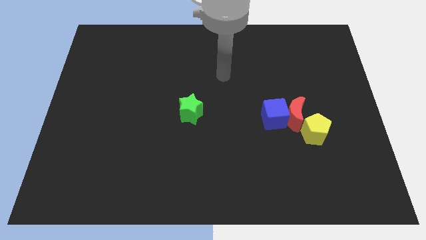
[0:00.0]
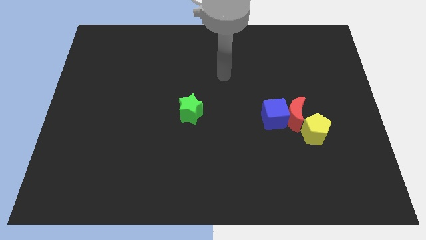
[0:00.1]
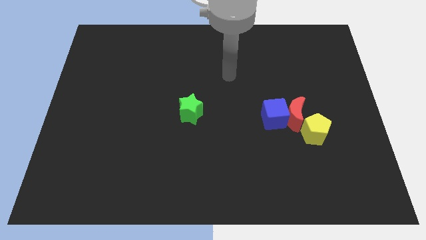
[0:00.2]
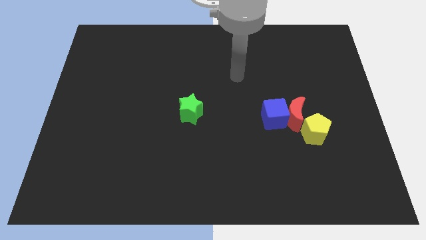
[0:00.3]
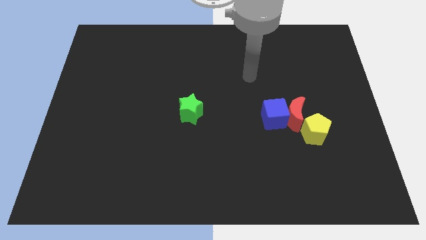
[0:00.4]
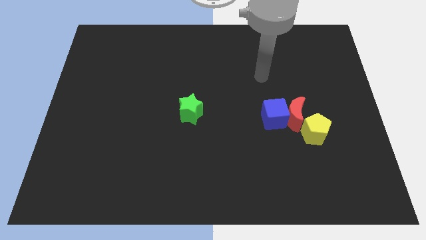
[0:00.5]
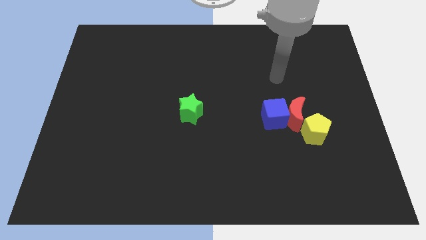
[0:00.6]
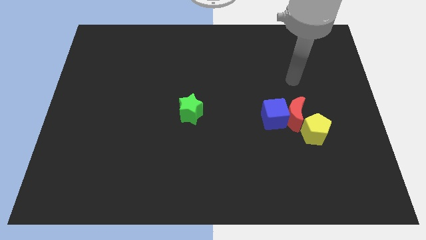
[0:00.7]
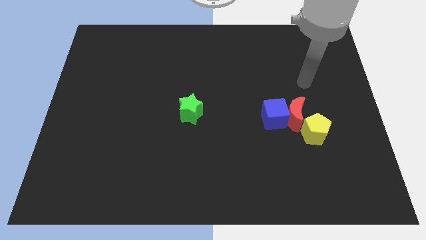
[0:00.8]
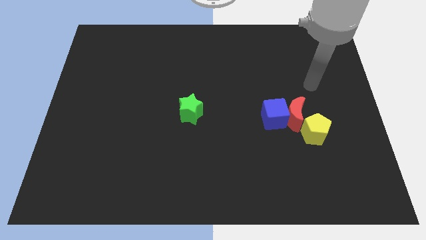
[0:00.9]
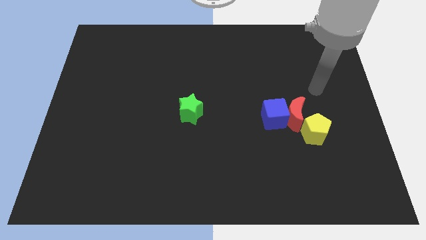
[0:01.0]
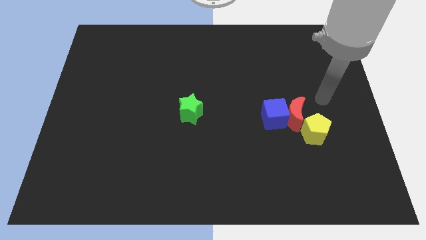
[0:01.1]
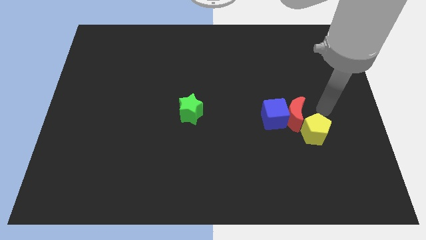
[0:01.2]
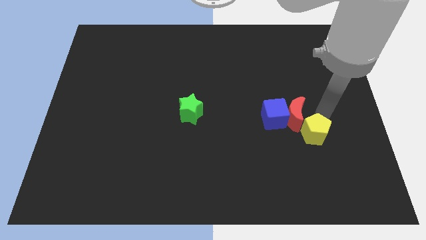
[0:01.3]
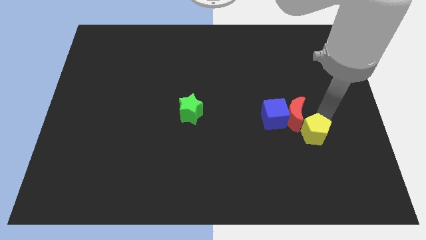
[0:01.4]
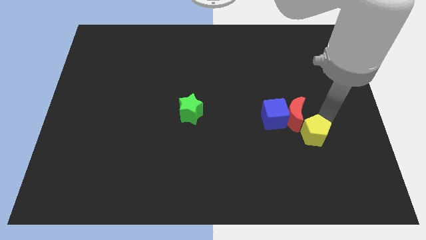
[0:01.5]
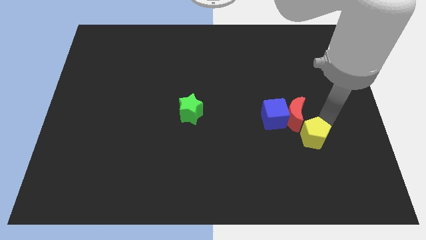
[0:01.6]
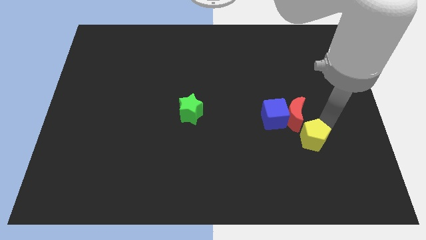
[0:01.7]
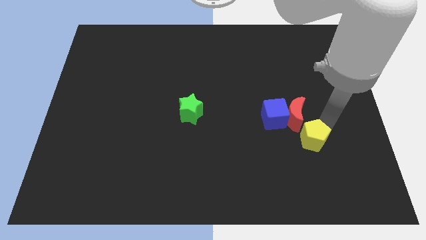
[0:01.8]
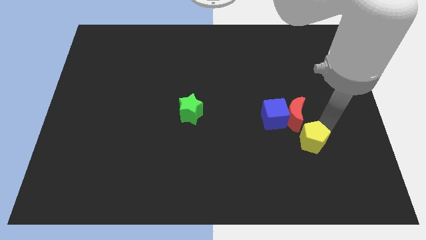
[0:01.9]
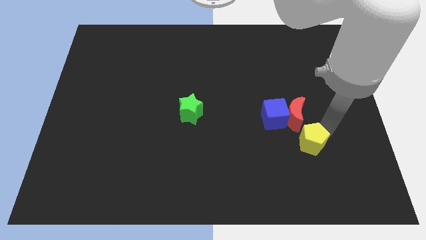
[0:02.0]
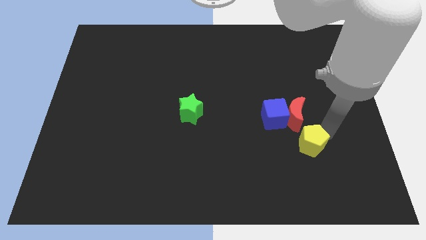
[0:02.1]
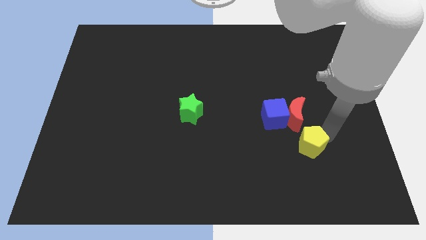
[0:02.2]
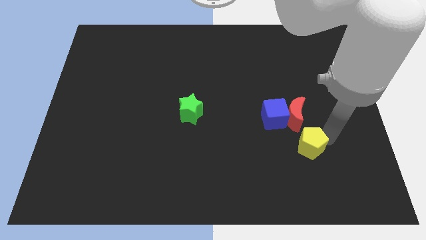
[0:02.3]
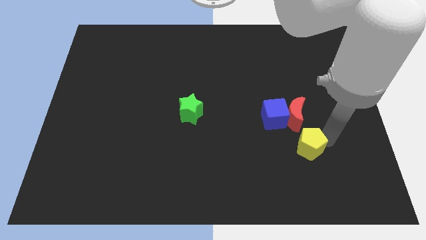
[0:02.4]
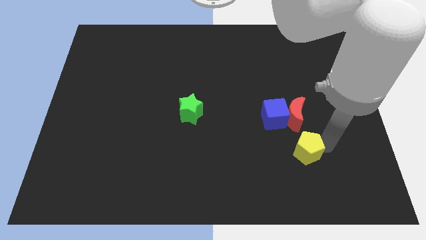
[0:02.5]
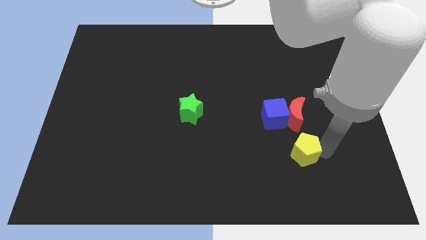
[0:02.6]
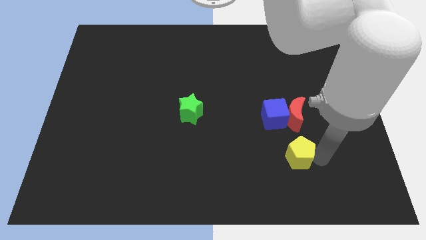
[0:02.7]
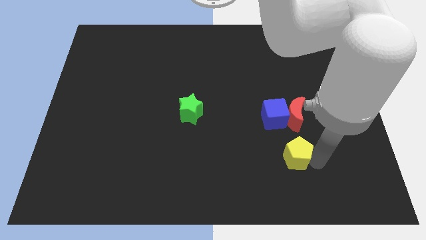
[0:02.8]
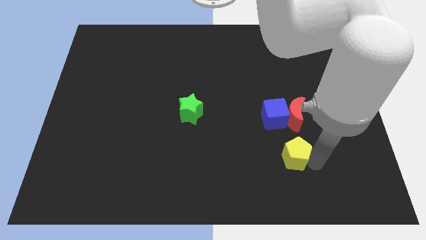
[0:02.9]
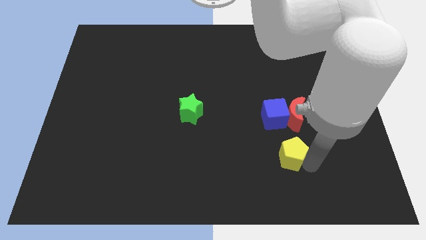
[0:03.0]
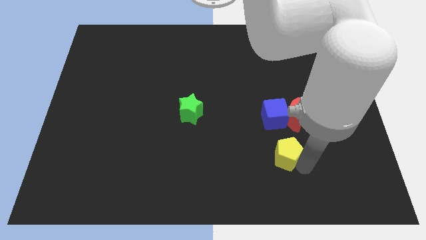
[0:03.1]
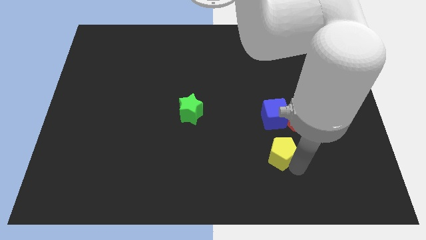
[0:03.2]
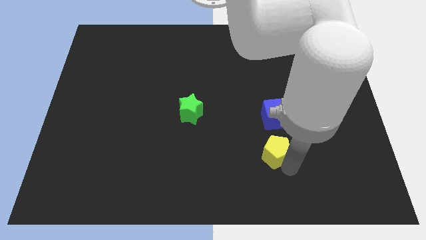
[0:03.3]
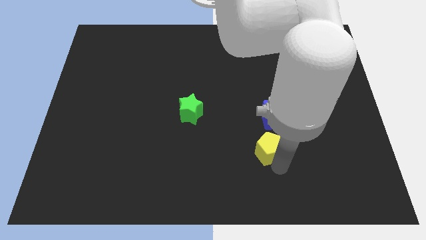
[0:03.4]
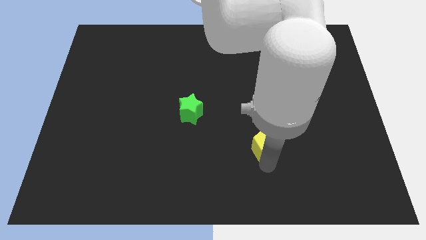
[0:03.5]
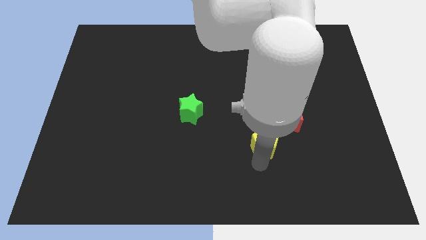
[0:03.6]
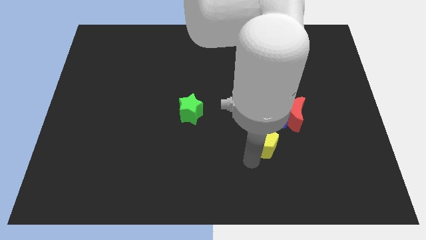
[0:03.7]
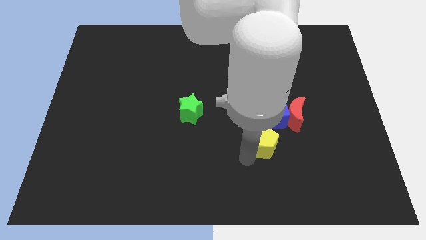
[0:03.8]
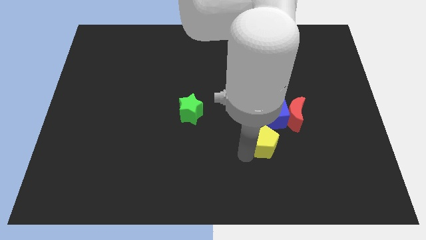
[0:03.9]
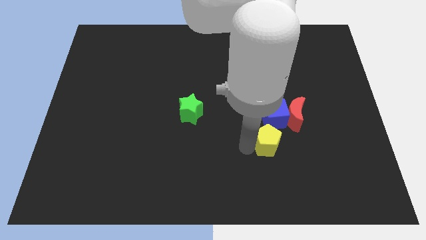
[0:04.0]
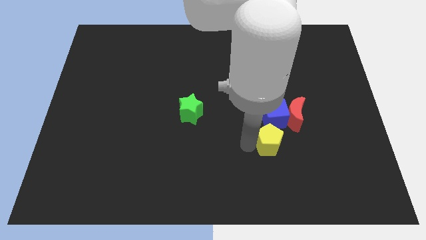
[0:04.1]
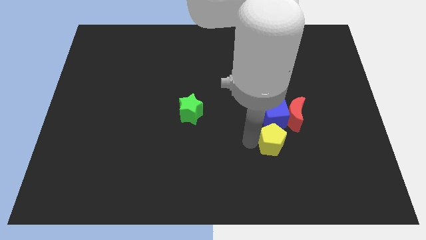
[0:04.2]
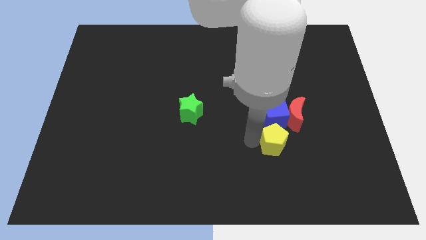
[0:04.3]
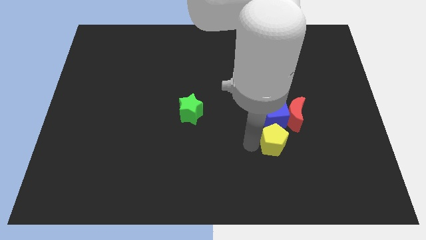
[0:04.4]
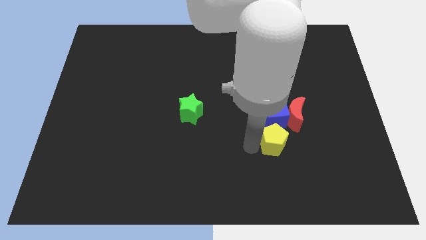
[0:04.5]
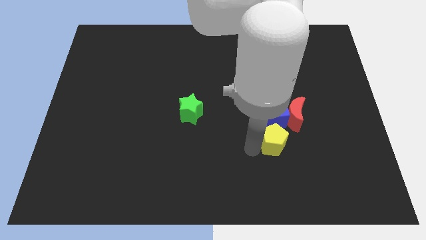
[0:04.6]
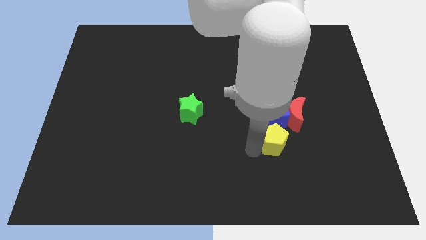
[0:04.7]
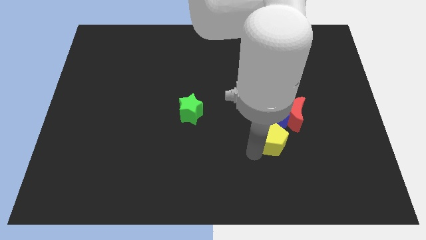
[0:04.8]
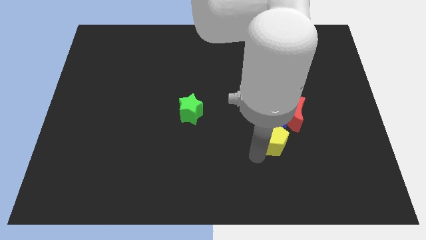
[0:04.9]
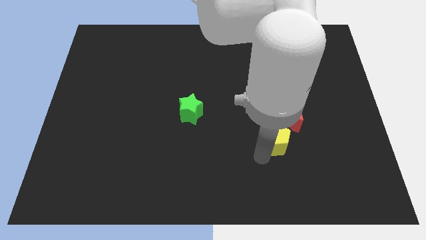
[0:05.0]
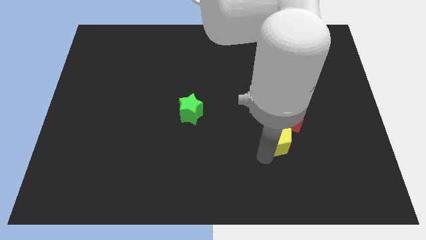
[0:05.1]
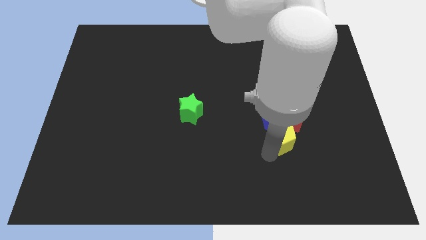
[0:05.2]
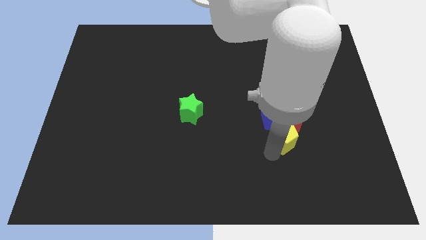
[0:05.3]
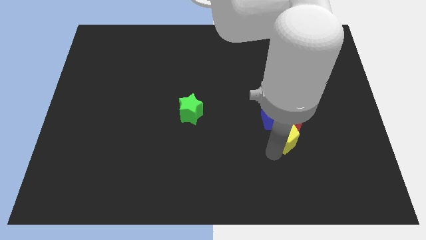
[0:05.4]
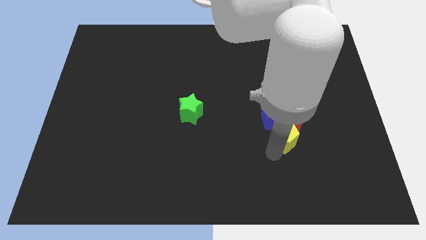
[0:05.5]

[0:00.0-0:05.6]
slide the yellow pentagon to the cube

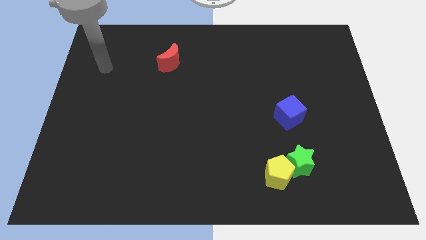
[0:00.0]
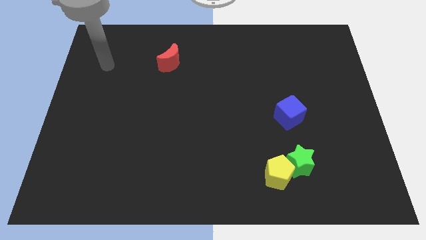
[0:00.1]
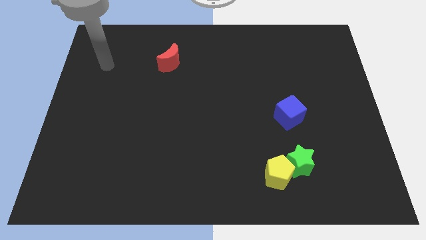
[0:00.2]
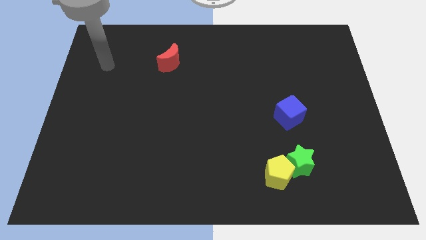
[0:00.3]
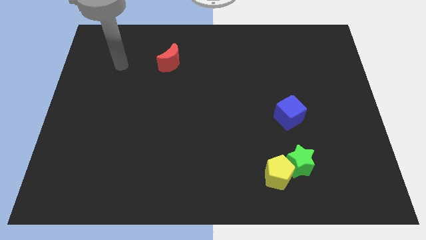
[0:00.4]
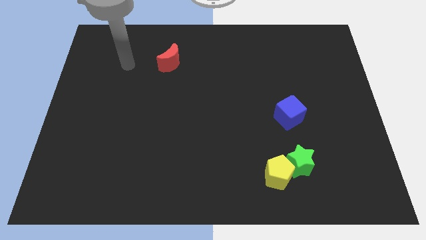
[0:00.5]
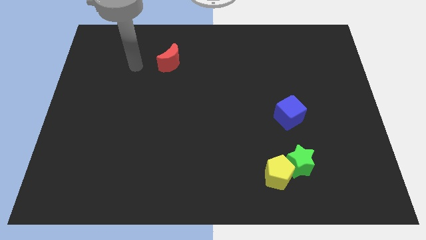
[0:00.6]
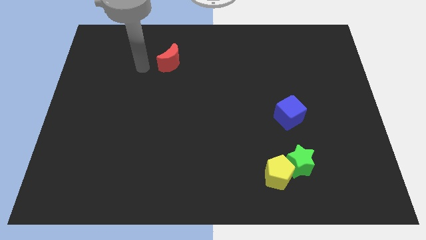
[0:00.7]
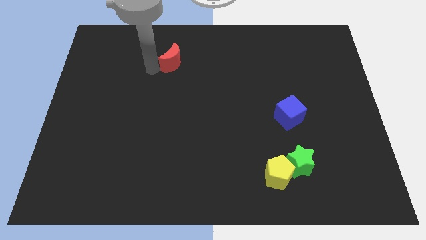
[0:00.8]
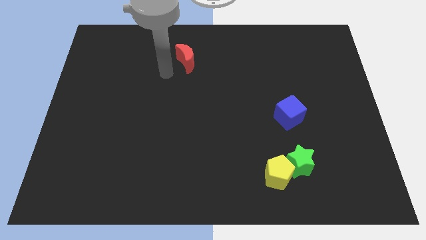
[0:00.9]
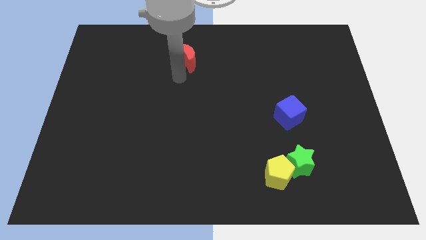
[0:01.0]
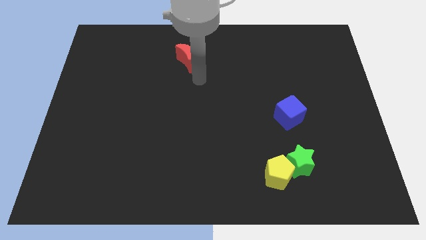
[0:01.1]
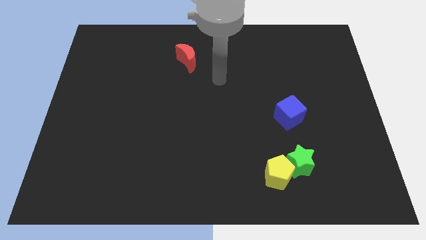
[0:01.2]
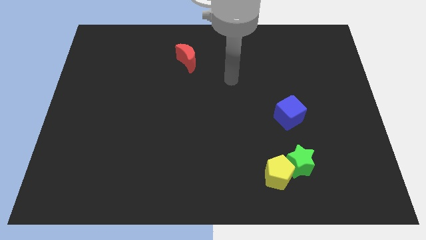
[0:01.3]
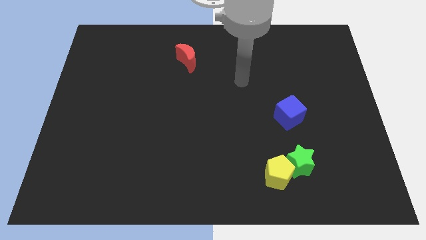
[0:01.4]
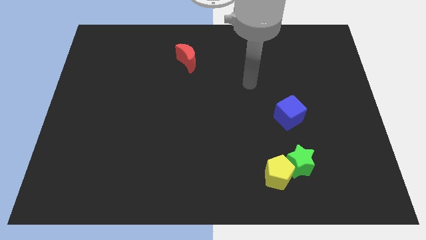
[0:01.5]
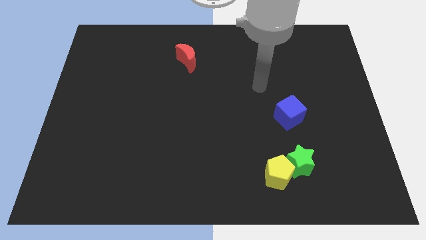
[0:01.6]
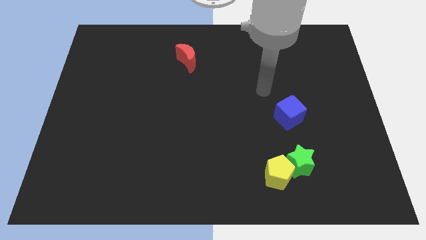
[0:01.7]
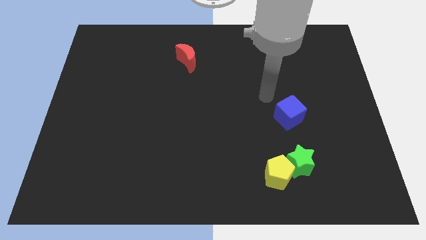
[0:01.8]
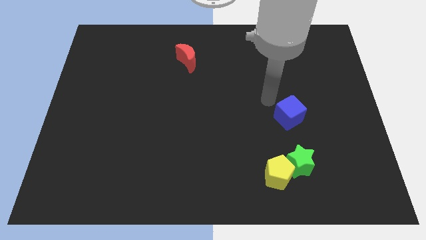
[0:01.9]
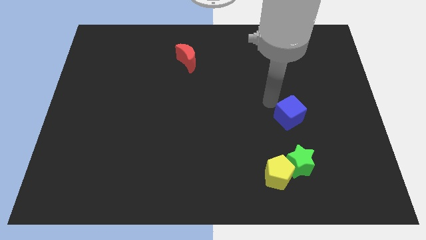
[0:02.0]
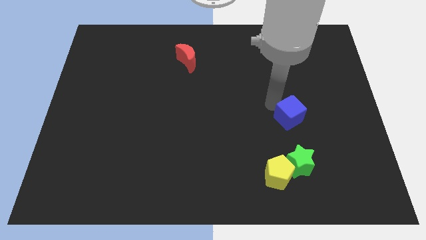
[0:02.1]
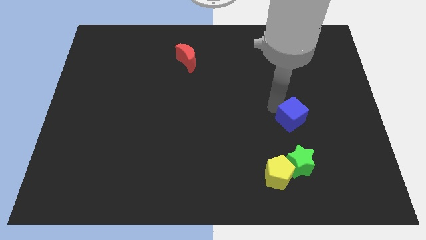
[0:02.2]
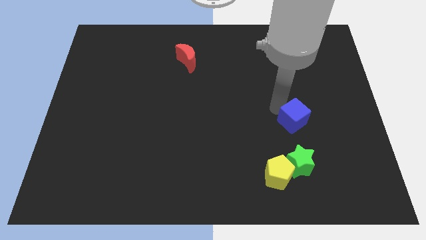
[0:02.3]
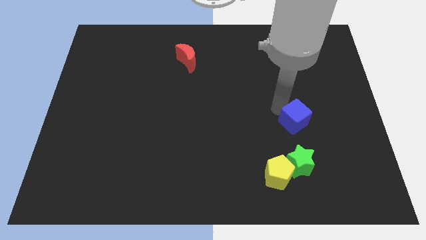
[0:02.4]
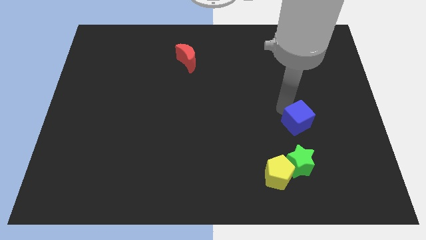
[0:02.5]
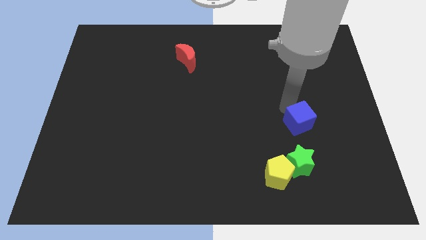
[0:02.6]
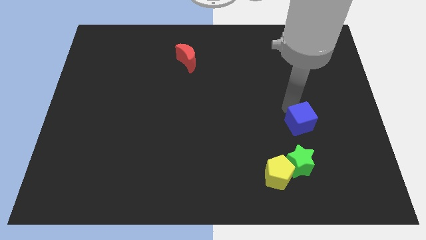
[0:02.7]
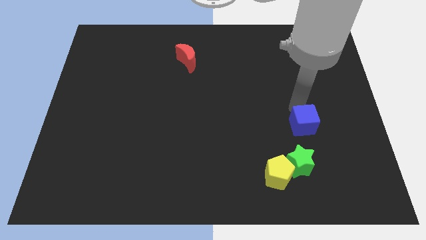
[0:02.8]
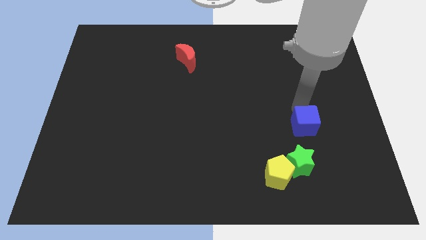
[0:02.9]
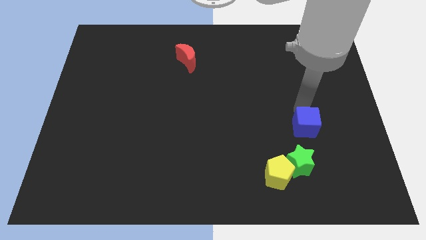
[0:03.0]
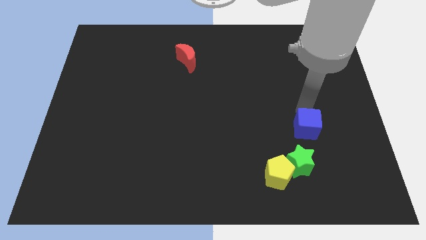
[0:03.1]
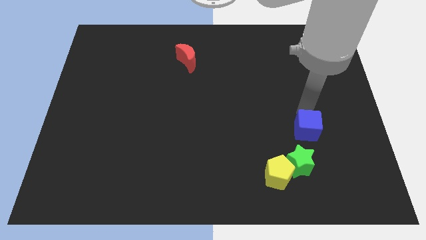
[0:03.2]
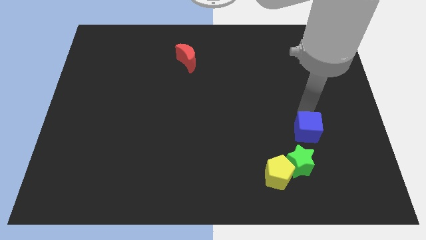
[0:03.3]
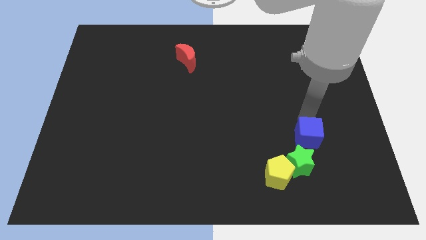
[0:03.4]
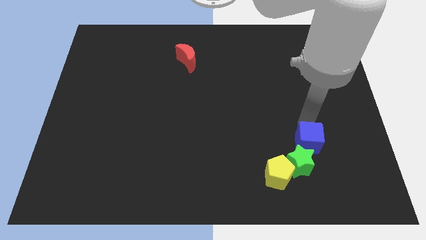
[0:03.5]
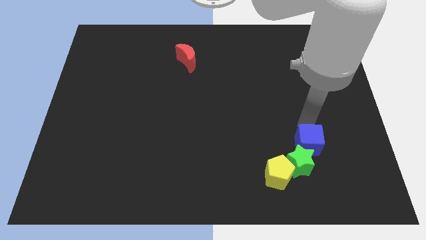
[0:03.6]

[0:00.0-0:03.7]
put the blue block towards the green block
